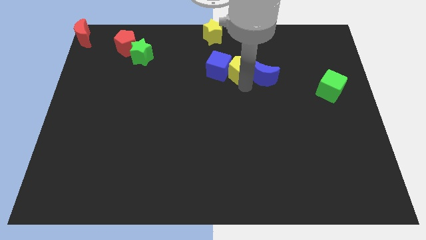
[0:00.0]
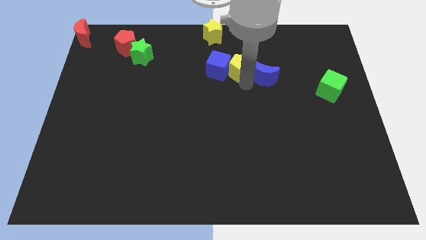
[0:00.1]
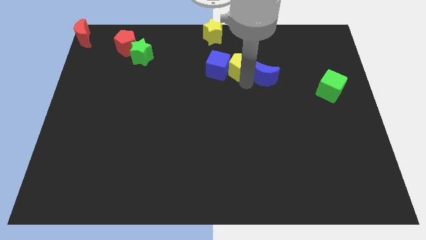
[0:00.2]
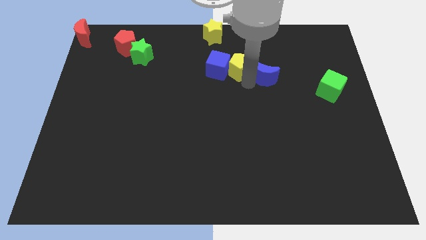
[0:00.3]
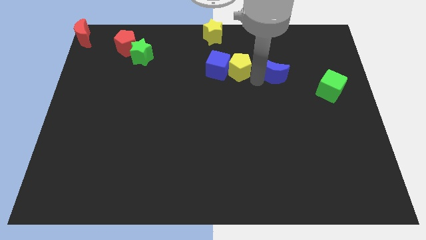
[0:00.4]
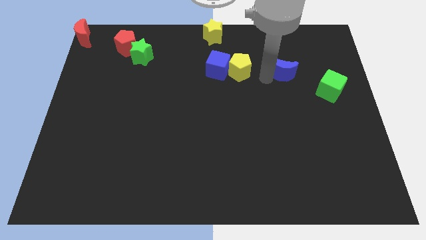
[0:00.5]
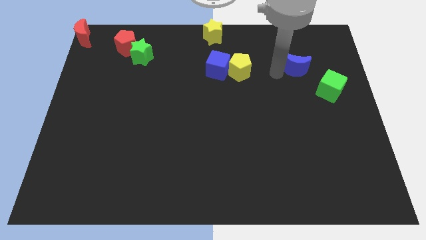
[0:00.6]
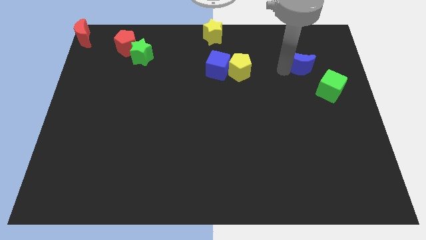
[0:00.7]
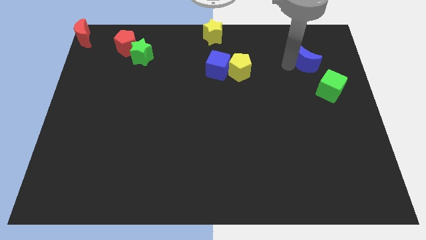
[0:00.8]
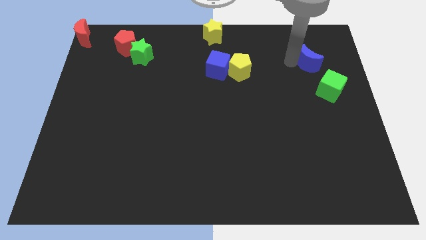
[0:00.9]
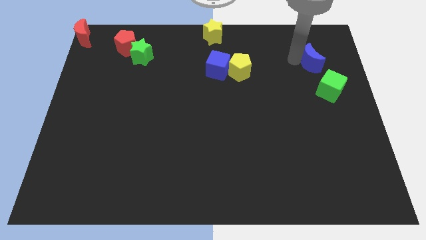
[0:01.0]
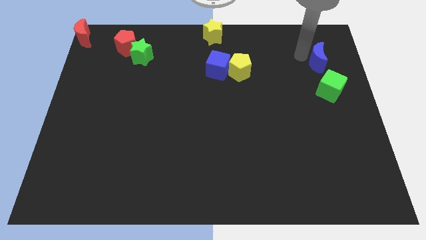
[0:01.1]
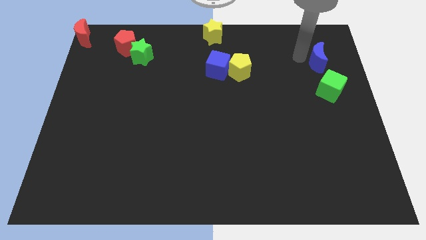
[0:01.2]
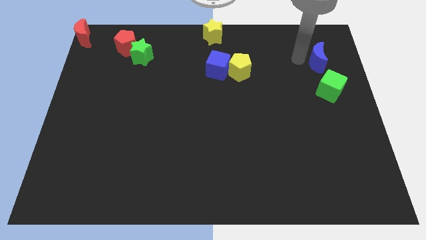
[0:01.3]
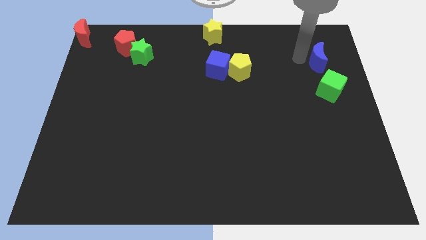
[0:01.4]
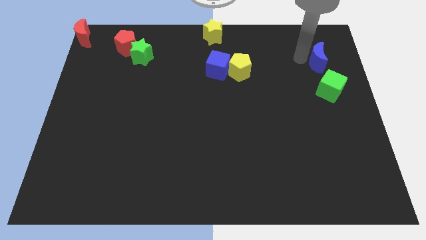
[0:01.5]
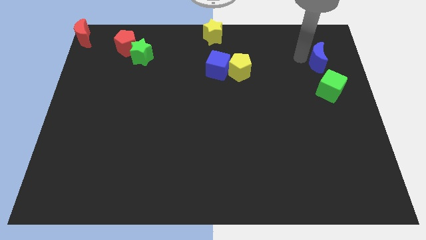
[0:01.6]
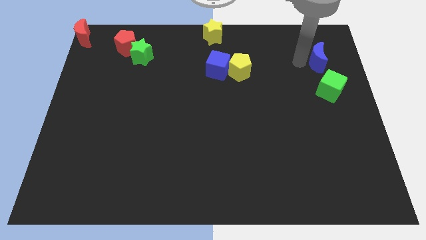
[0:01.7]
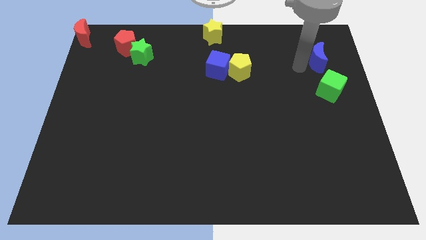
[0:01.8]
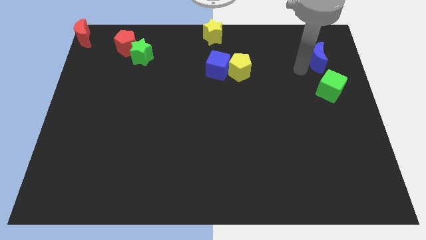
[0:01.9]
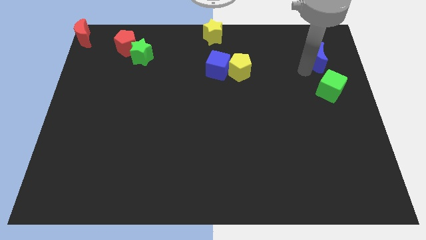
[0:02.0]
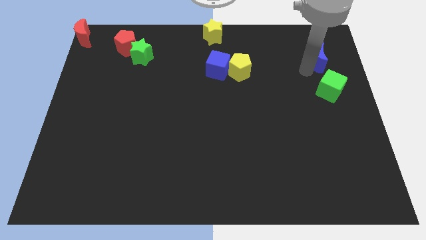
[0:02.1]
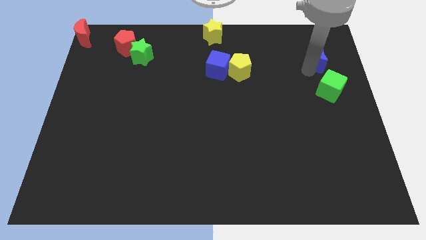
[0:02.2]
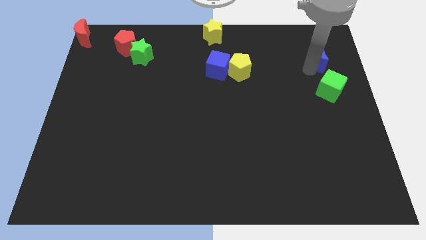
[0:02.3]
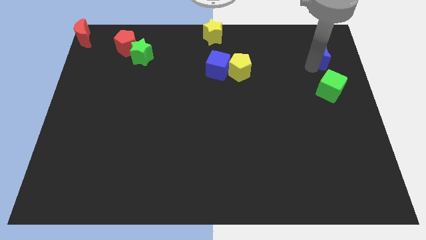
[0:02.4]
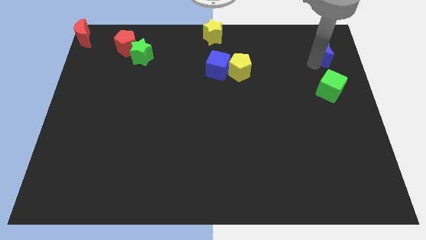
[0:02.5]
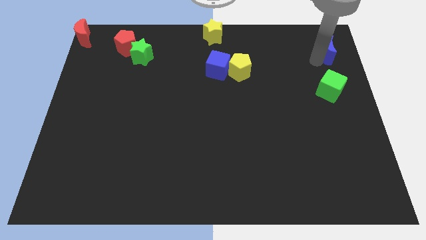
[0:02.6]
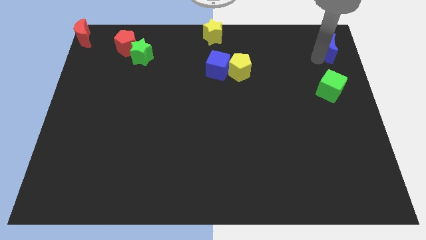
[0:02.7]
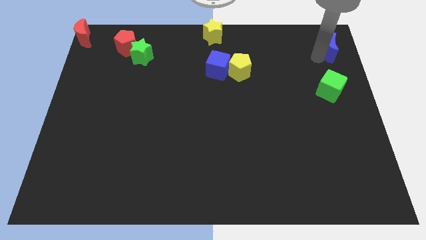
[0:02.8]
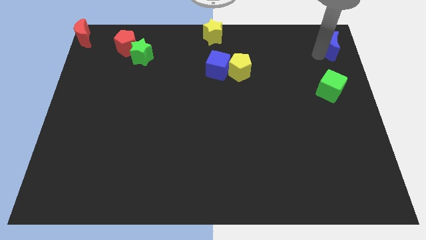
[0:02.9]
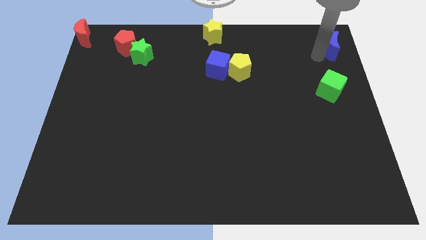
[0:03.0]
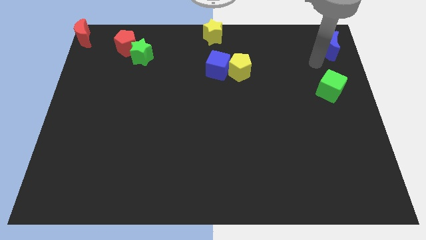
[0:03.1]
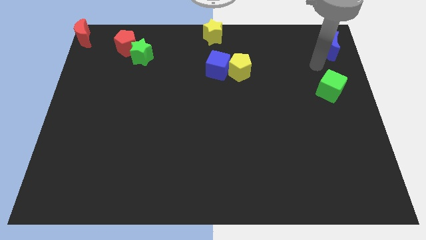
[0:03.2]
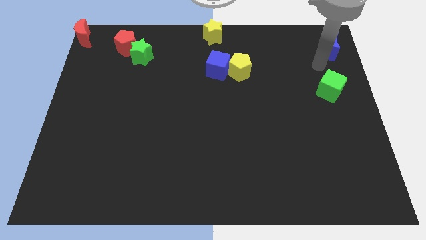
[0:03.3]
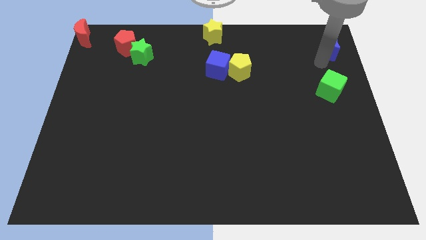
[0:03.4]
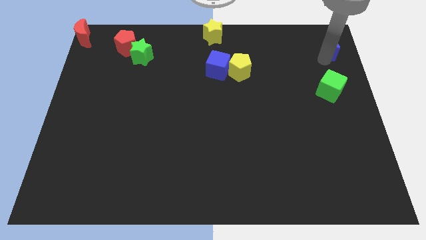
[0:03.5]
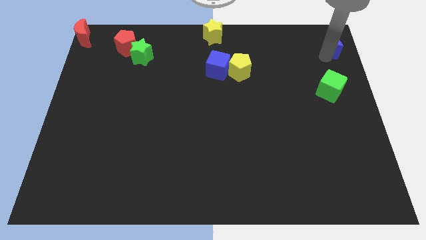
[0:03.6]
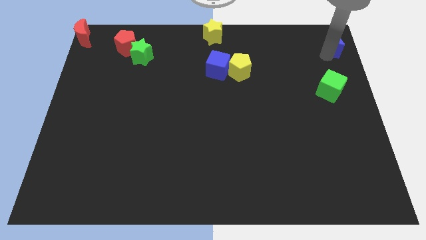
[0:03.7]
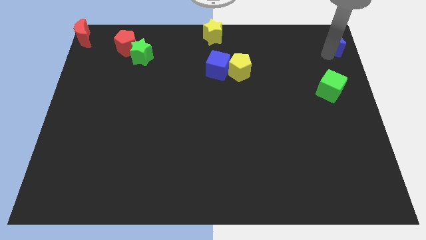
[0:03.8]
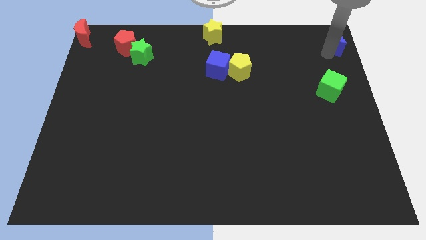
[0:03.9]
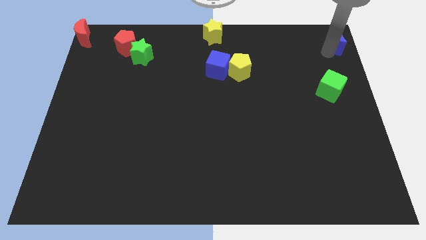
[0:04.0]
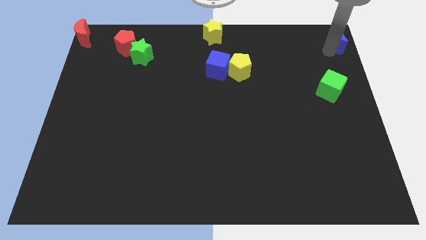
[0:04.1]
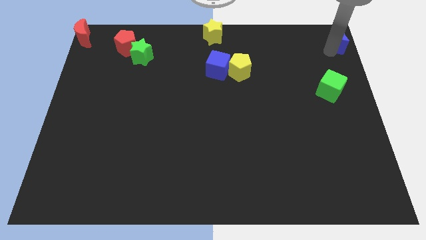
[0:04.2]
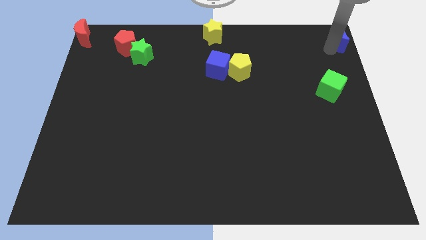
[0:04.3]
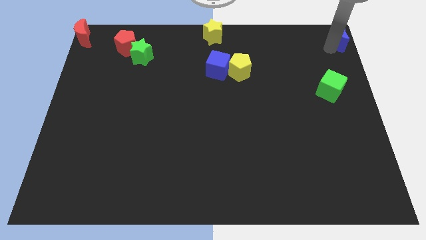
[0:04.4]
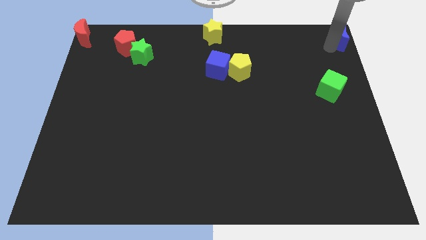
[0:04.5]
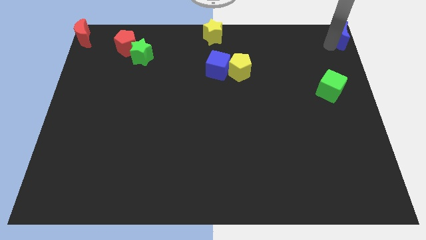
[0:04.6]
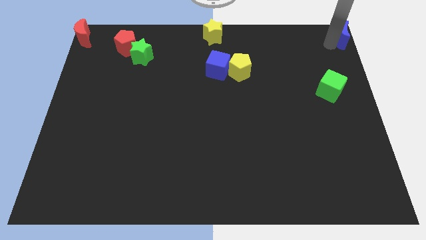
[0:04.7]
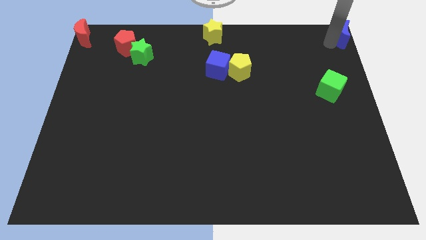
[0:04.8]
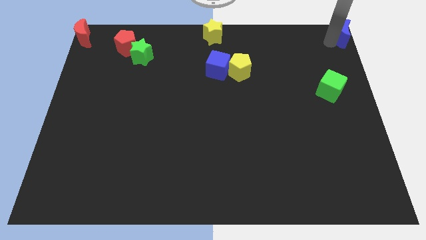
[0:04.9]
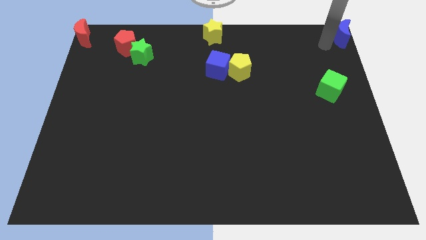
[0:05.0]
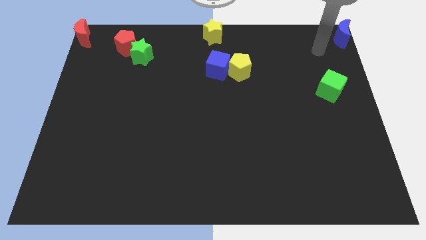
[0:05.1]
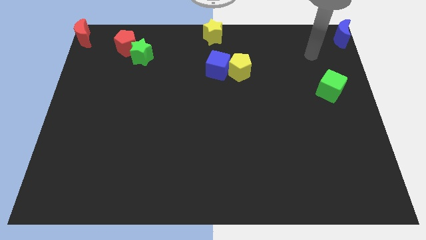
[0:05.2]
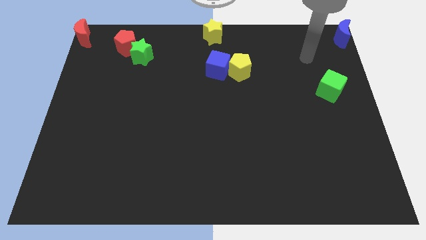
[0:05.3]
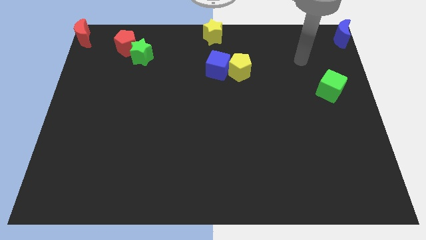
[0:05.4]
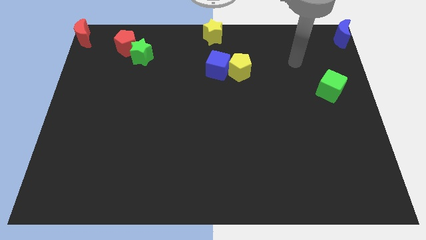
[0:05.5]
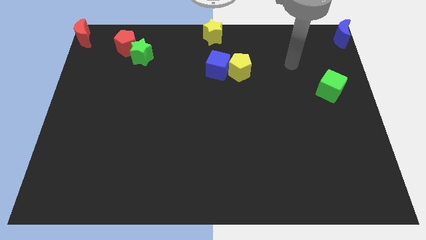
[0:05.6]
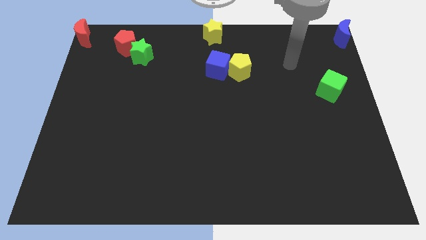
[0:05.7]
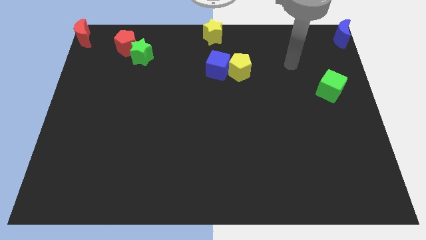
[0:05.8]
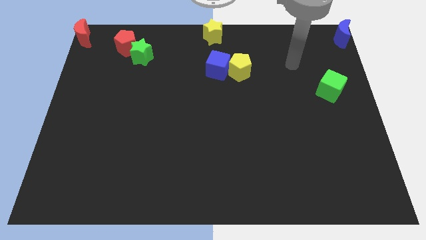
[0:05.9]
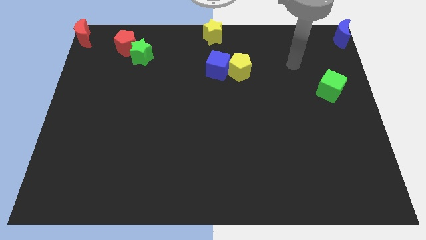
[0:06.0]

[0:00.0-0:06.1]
place blue moon to the top right

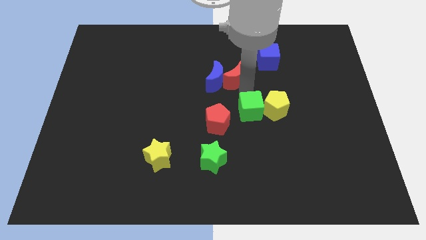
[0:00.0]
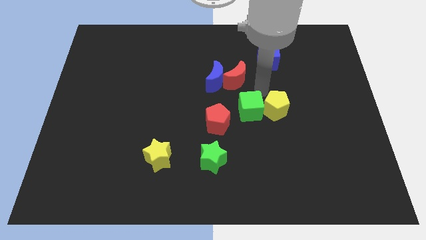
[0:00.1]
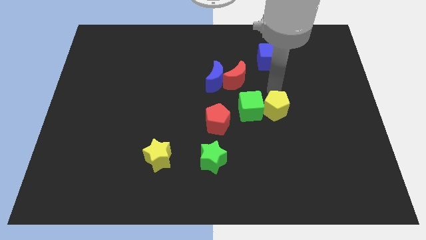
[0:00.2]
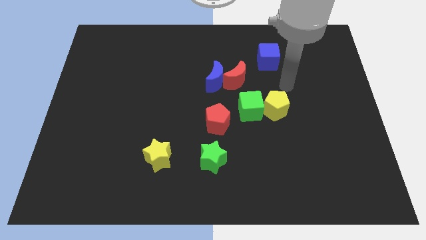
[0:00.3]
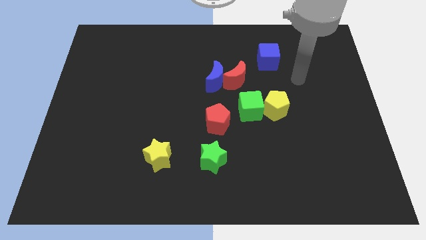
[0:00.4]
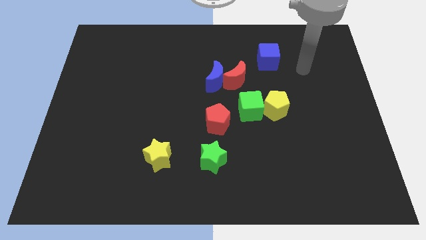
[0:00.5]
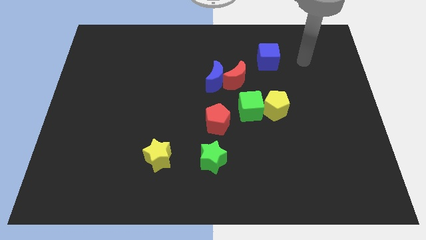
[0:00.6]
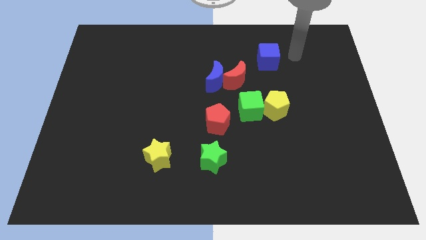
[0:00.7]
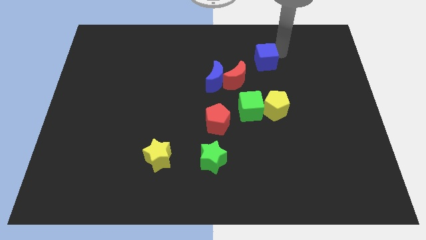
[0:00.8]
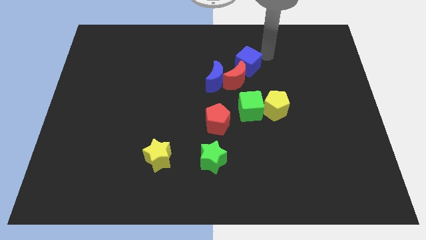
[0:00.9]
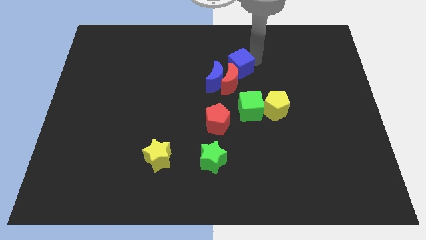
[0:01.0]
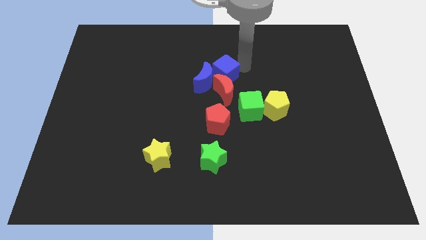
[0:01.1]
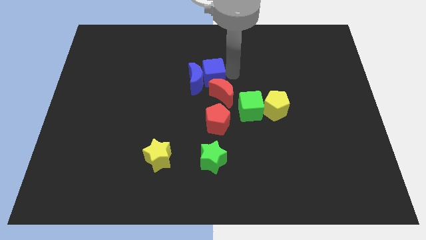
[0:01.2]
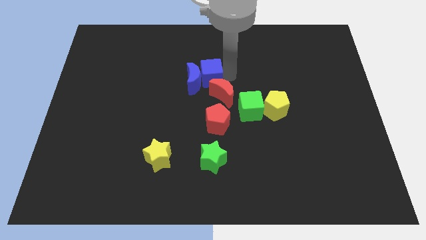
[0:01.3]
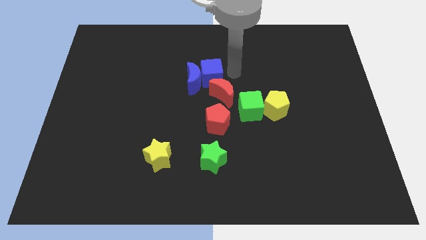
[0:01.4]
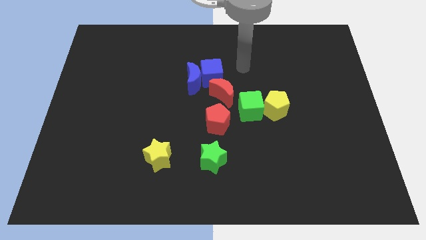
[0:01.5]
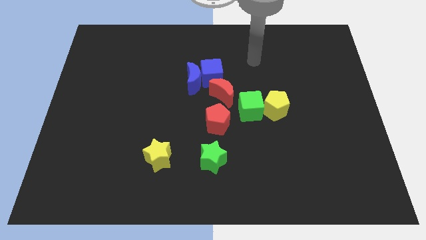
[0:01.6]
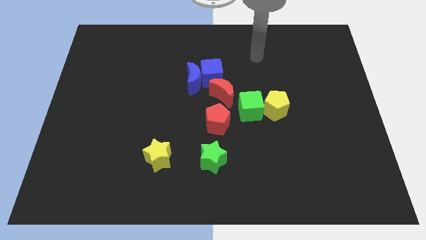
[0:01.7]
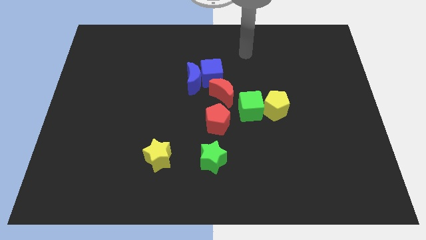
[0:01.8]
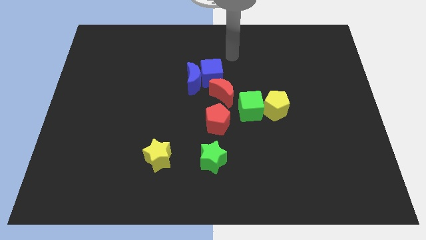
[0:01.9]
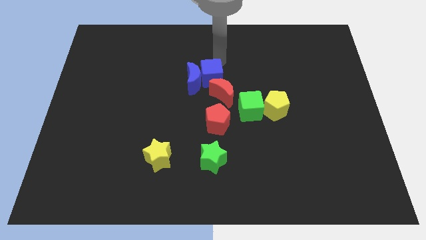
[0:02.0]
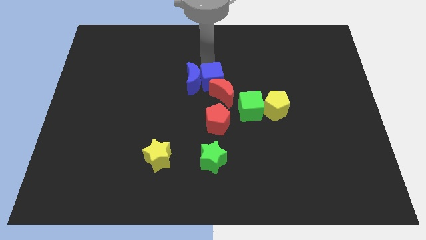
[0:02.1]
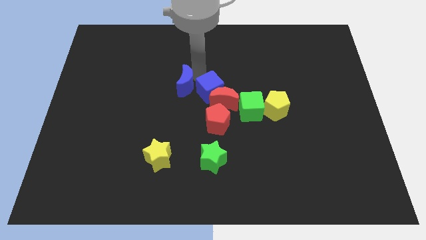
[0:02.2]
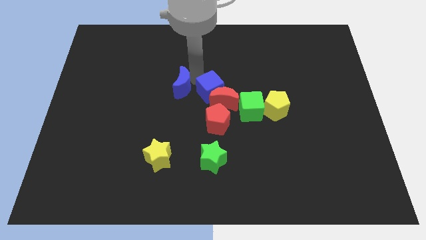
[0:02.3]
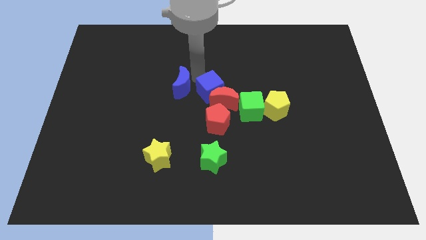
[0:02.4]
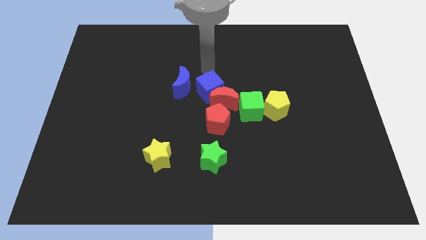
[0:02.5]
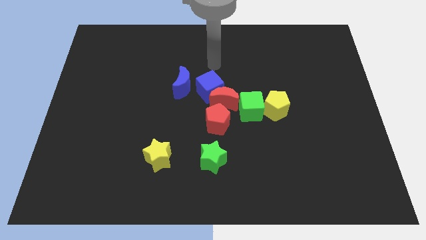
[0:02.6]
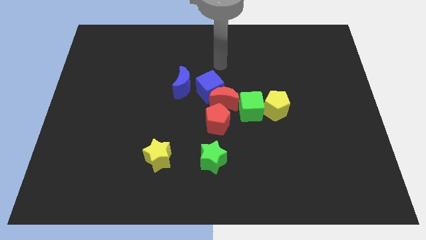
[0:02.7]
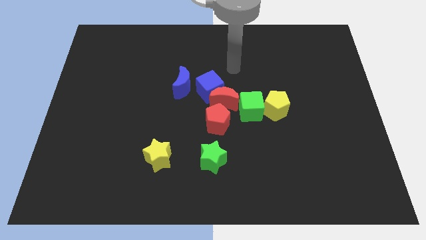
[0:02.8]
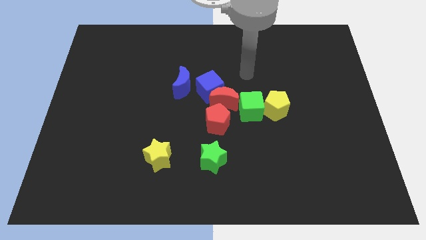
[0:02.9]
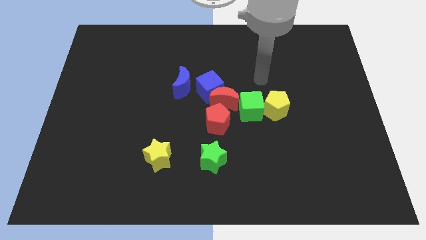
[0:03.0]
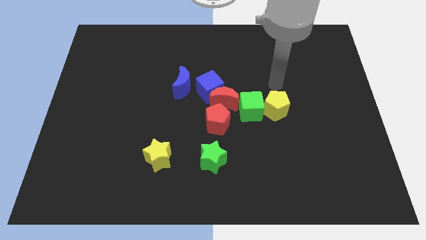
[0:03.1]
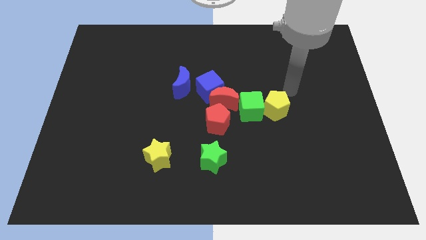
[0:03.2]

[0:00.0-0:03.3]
separate blue moon and blue cube
